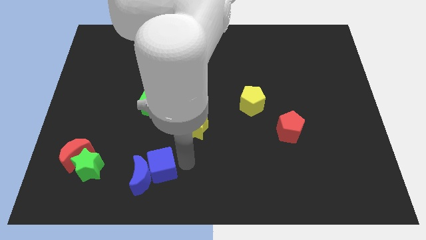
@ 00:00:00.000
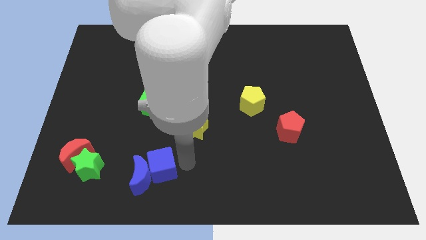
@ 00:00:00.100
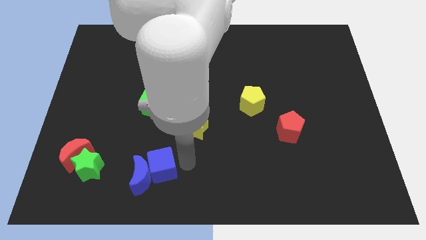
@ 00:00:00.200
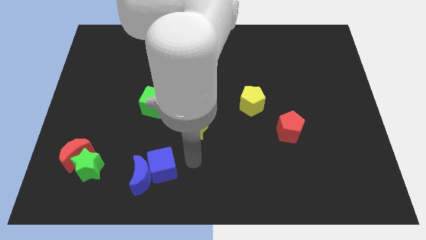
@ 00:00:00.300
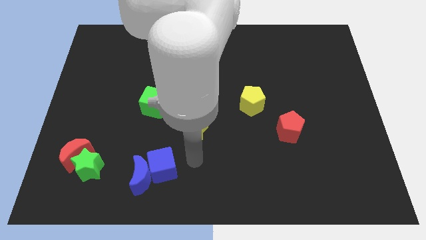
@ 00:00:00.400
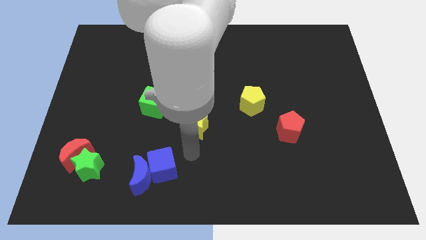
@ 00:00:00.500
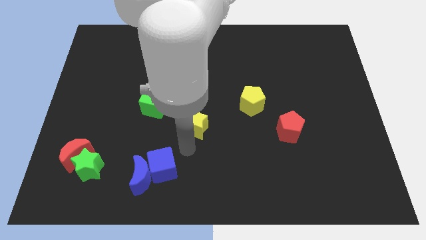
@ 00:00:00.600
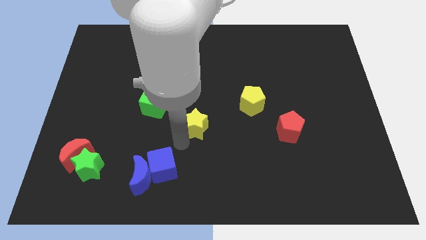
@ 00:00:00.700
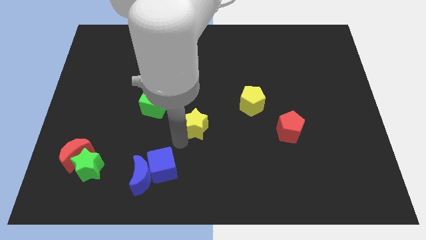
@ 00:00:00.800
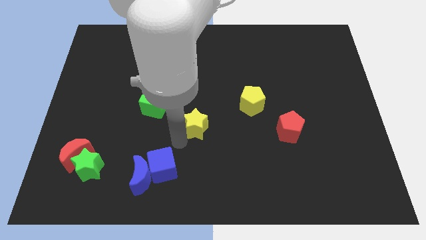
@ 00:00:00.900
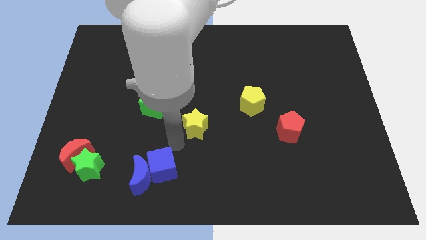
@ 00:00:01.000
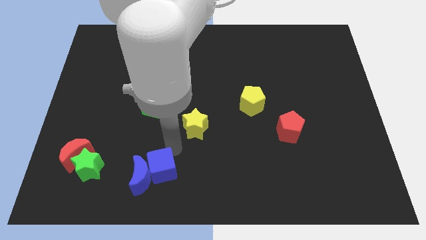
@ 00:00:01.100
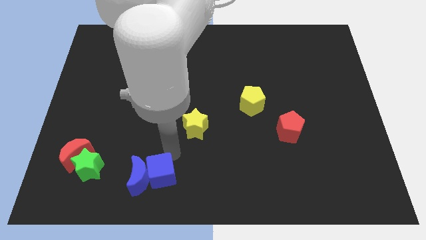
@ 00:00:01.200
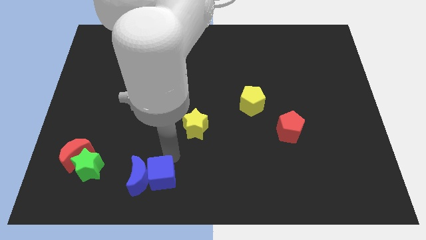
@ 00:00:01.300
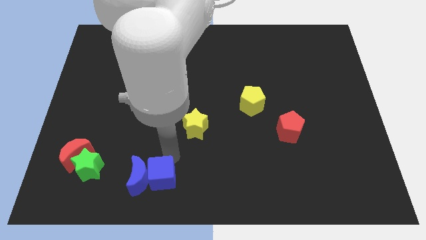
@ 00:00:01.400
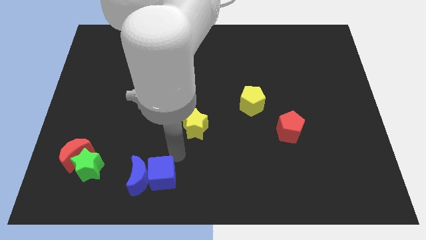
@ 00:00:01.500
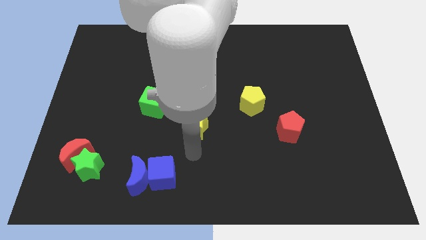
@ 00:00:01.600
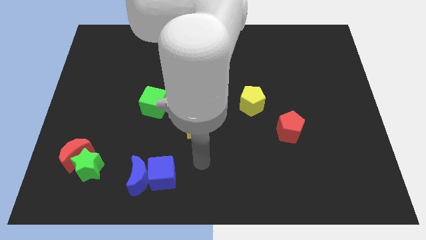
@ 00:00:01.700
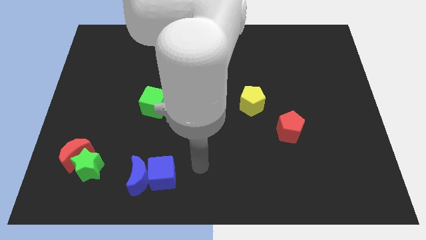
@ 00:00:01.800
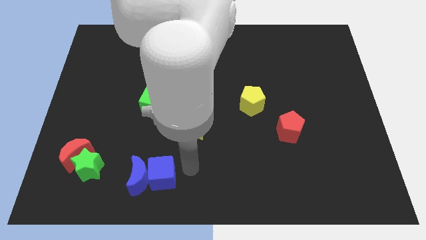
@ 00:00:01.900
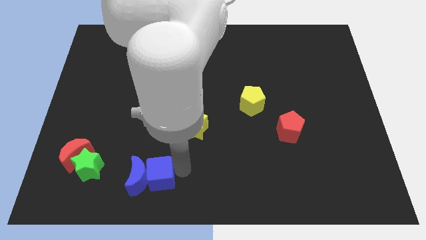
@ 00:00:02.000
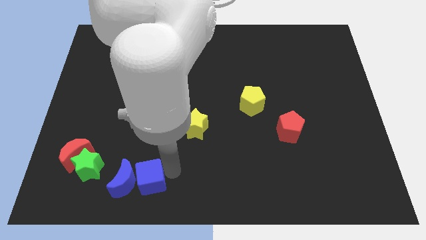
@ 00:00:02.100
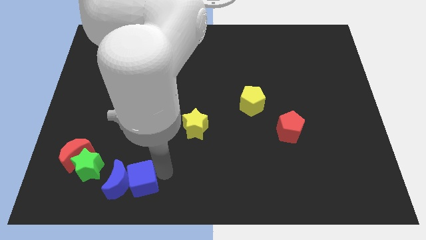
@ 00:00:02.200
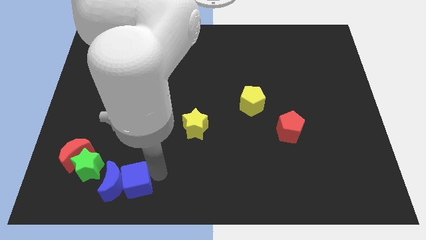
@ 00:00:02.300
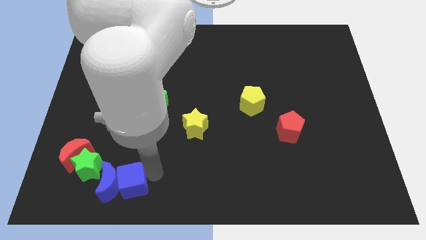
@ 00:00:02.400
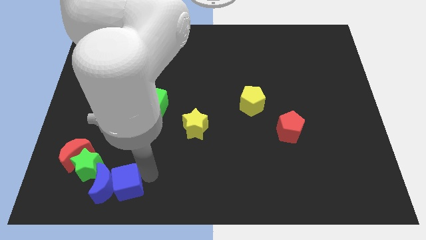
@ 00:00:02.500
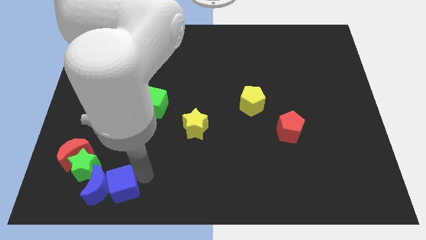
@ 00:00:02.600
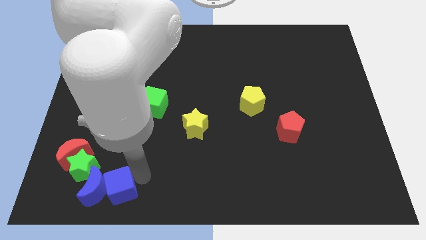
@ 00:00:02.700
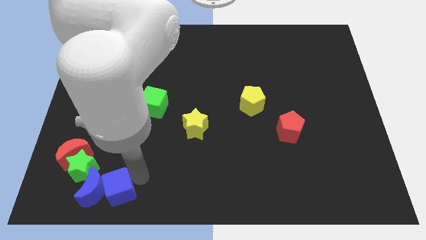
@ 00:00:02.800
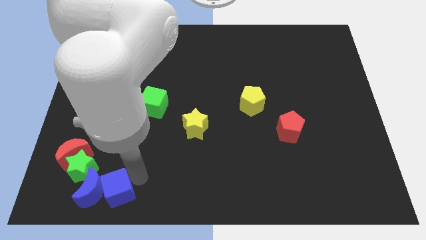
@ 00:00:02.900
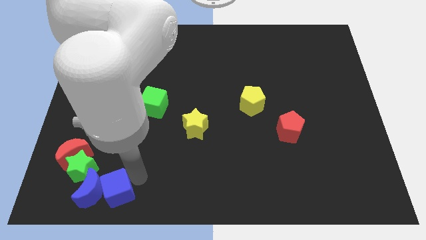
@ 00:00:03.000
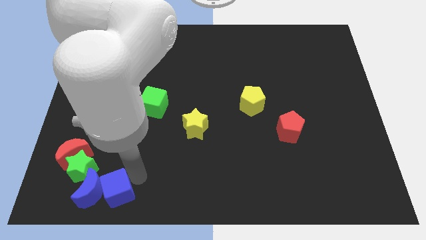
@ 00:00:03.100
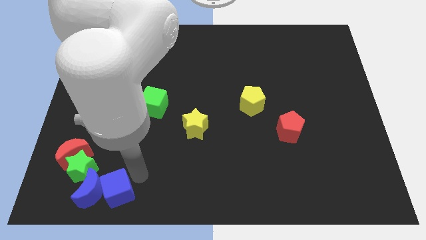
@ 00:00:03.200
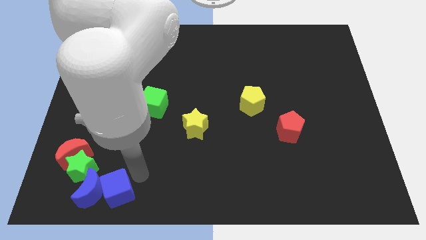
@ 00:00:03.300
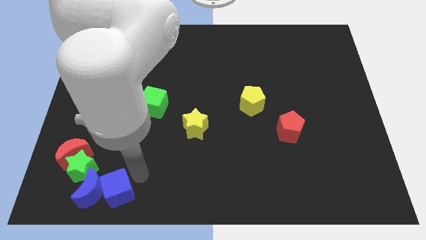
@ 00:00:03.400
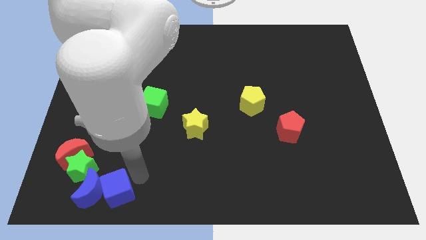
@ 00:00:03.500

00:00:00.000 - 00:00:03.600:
move the blue cube along with blue crescent into the green star

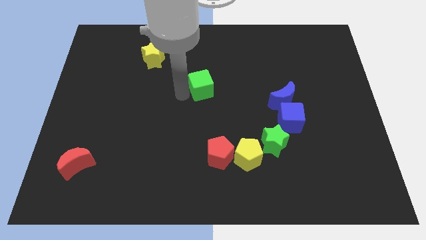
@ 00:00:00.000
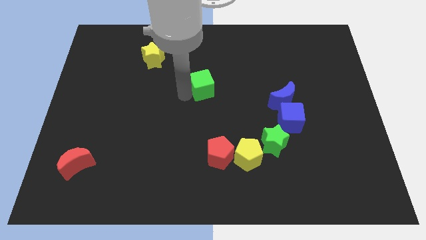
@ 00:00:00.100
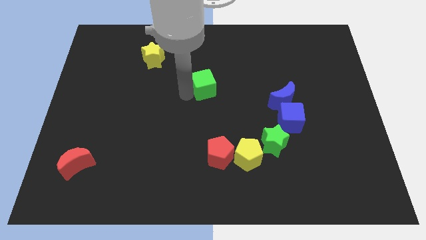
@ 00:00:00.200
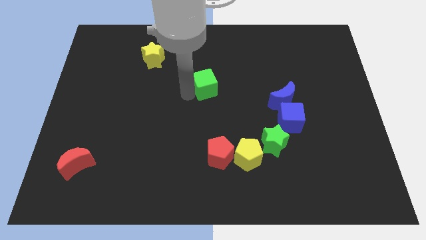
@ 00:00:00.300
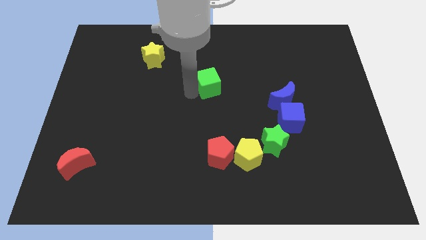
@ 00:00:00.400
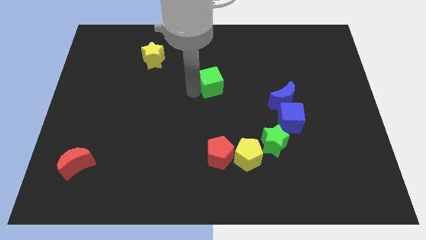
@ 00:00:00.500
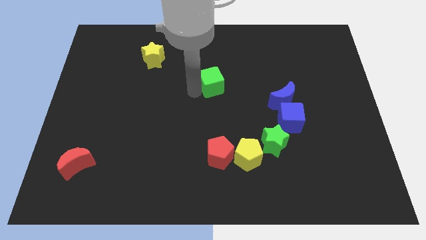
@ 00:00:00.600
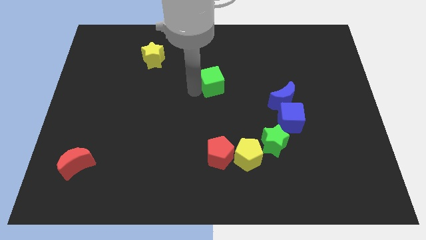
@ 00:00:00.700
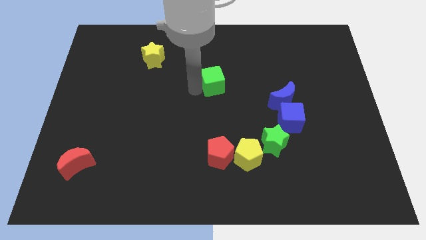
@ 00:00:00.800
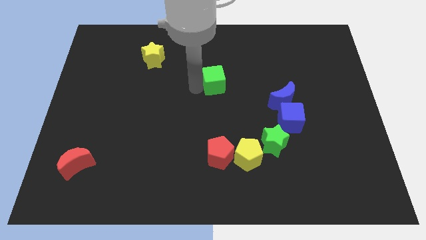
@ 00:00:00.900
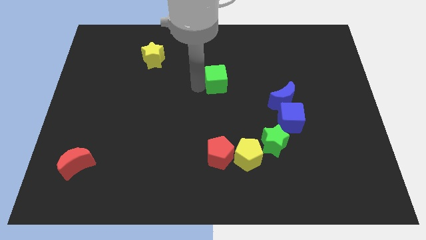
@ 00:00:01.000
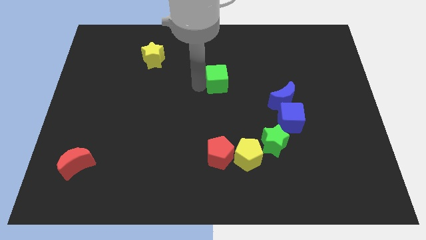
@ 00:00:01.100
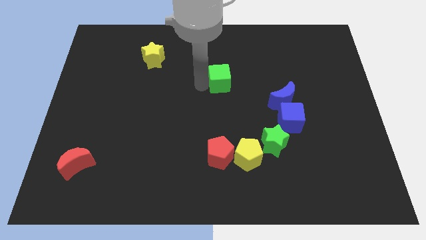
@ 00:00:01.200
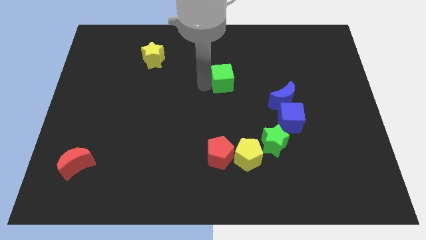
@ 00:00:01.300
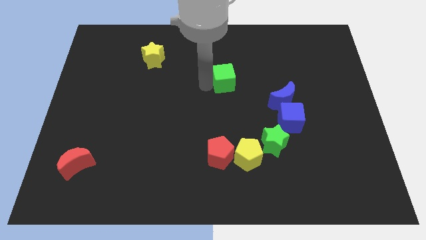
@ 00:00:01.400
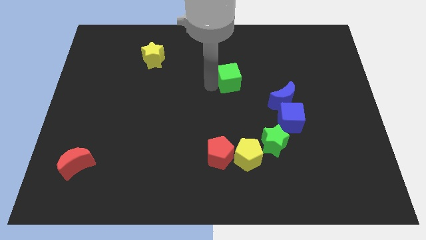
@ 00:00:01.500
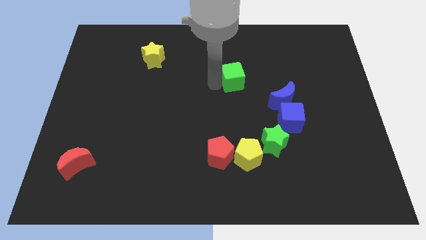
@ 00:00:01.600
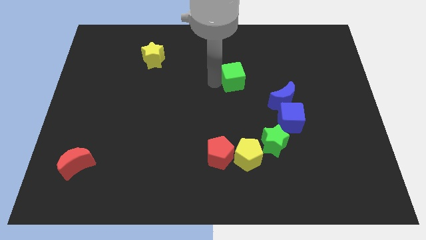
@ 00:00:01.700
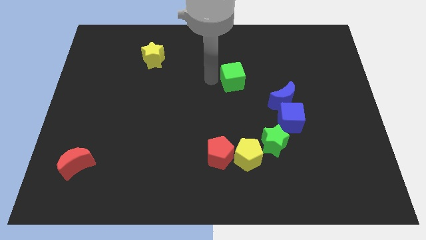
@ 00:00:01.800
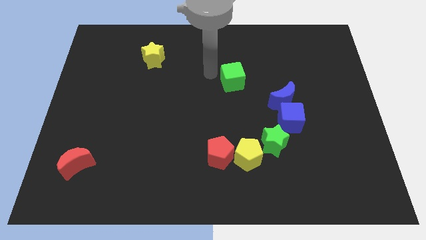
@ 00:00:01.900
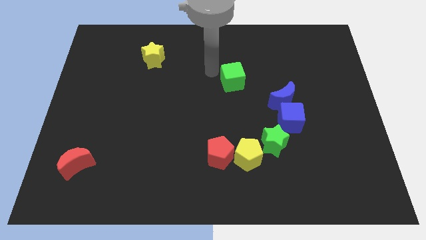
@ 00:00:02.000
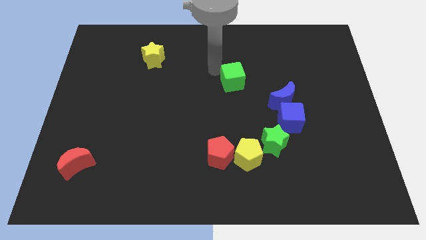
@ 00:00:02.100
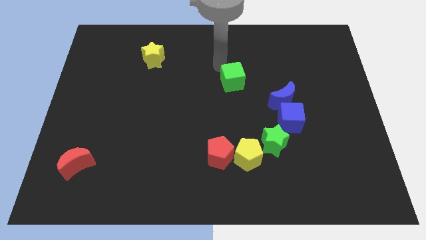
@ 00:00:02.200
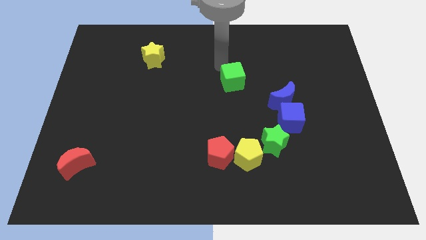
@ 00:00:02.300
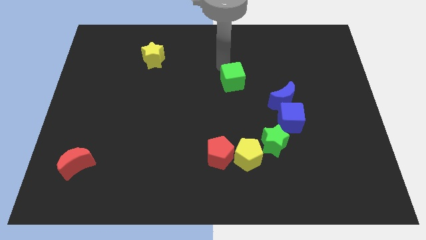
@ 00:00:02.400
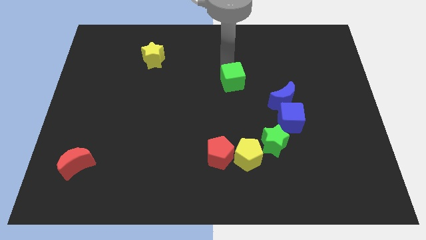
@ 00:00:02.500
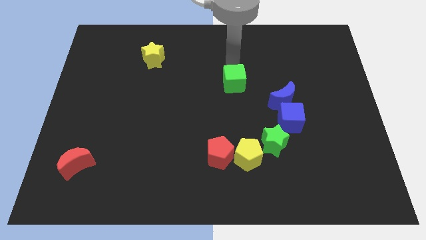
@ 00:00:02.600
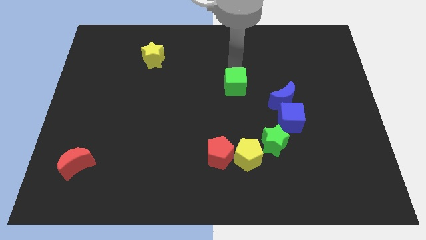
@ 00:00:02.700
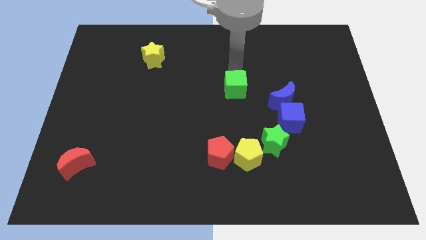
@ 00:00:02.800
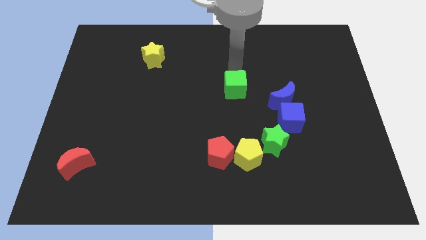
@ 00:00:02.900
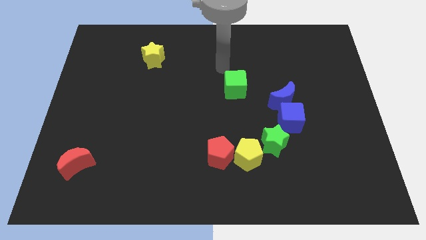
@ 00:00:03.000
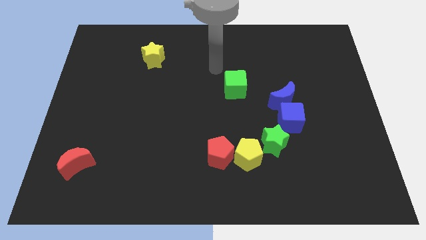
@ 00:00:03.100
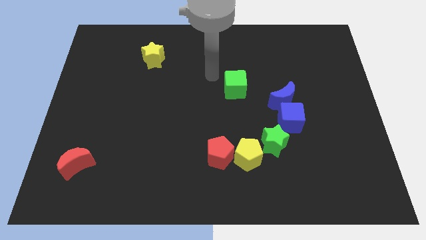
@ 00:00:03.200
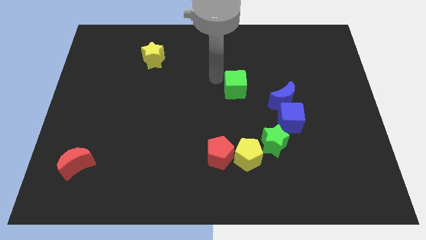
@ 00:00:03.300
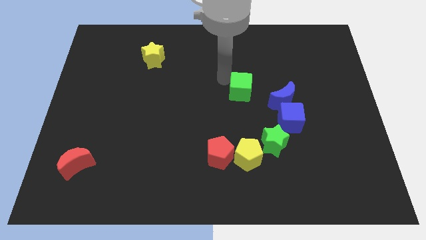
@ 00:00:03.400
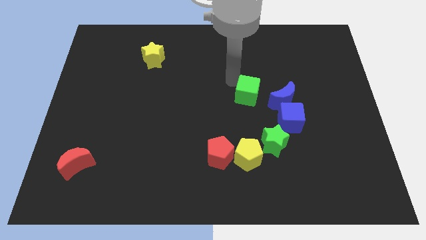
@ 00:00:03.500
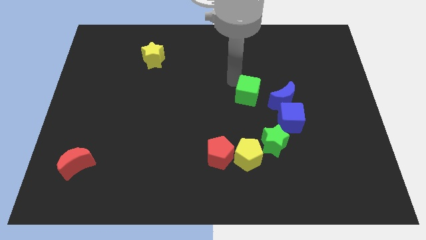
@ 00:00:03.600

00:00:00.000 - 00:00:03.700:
move the green cube to the left of the blue crescent

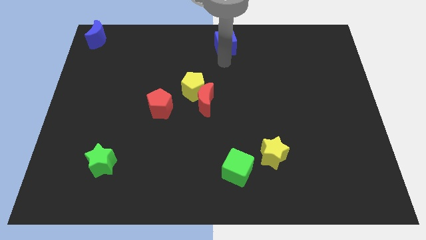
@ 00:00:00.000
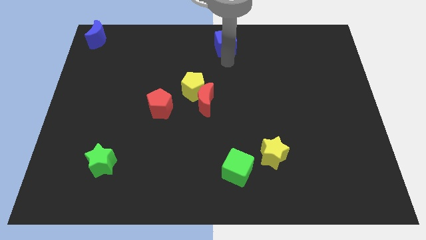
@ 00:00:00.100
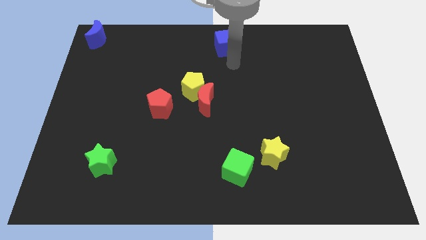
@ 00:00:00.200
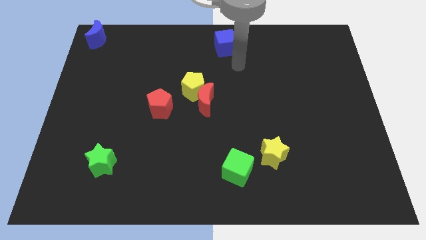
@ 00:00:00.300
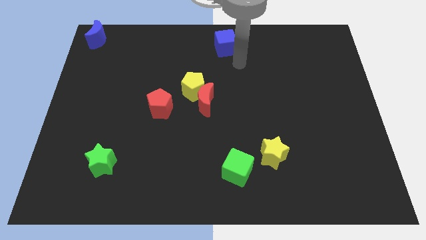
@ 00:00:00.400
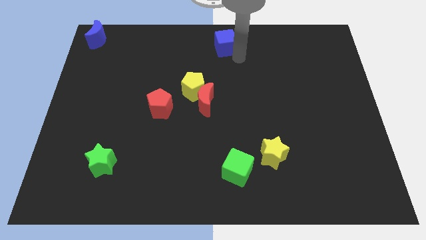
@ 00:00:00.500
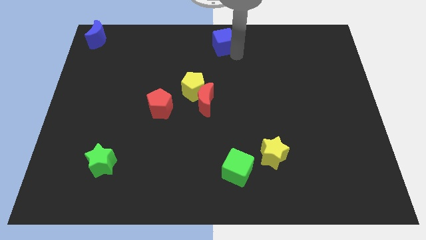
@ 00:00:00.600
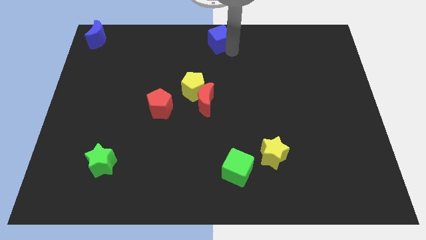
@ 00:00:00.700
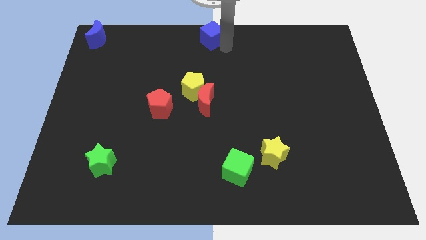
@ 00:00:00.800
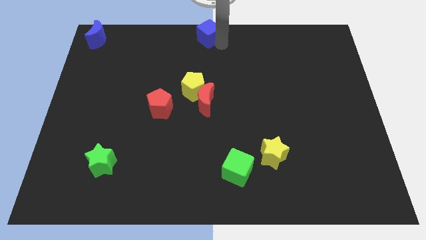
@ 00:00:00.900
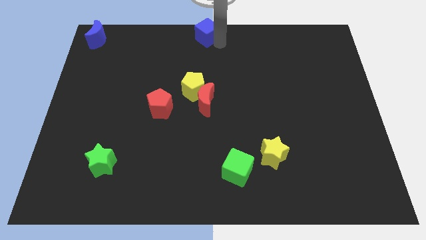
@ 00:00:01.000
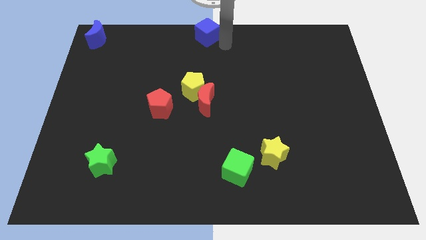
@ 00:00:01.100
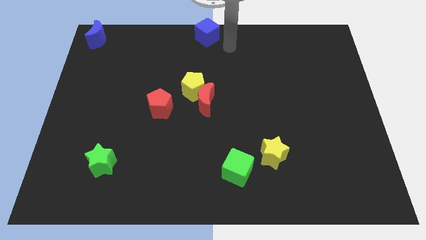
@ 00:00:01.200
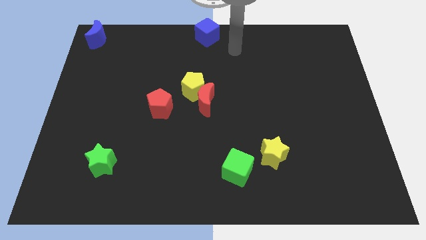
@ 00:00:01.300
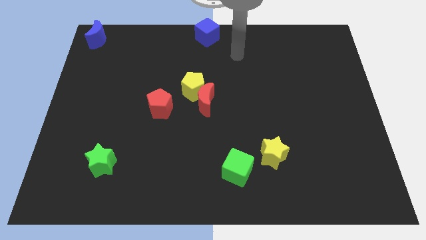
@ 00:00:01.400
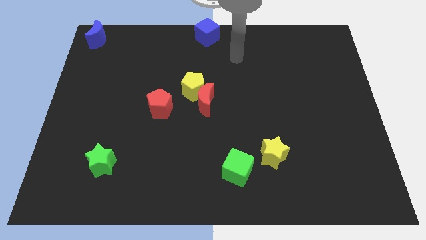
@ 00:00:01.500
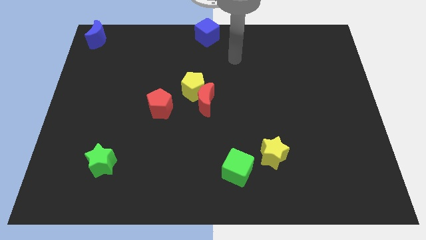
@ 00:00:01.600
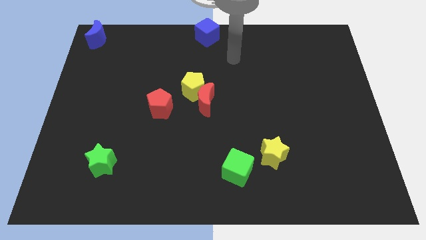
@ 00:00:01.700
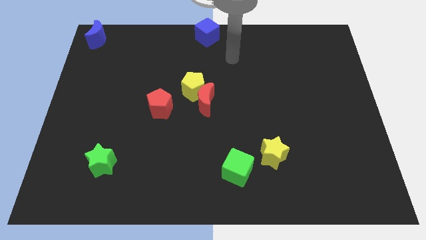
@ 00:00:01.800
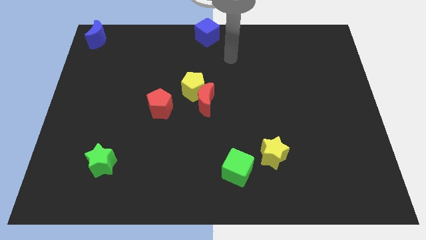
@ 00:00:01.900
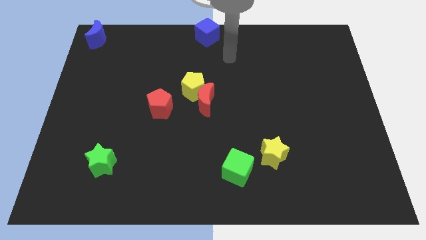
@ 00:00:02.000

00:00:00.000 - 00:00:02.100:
place blue cube at the top center of the board
